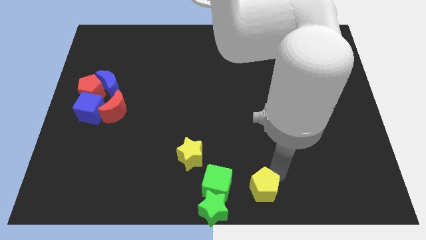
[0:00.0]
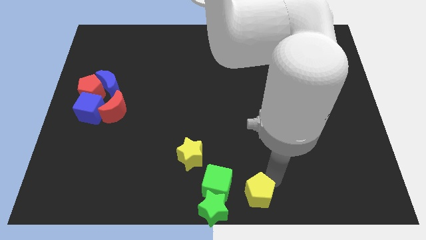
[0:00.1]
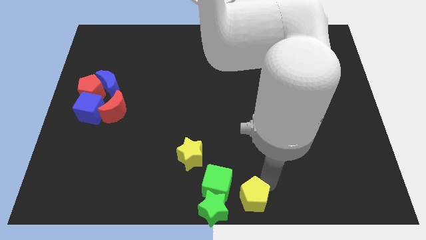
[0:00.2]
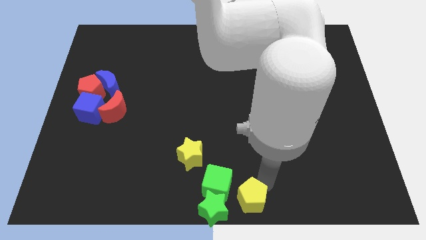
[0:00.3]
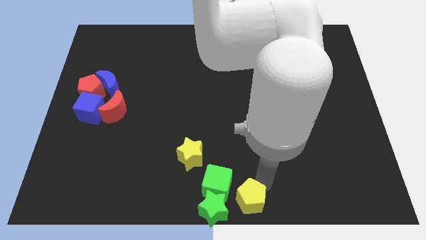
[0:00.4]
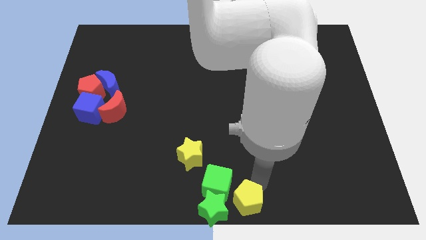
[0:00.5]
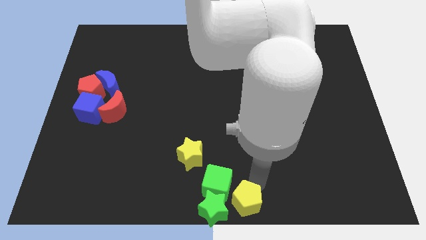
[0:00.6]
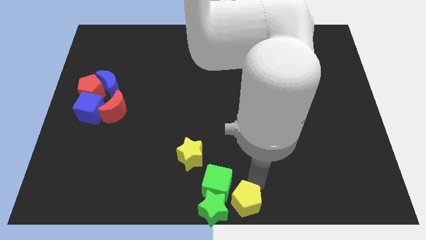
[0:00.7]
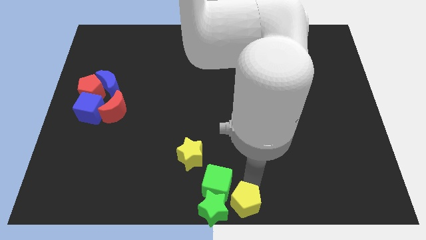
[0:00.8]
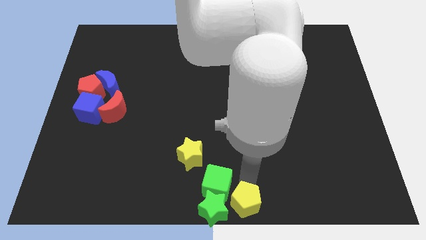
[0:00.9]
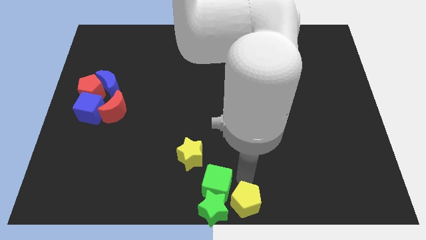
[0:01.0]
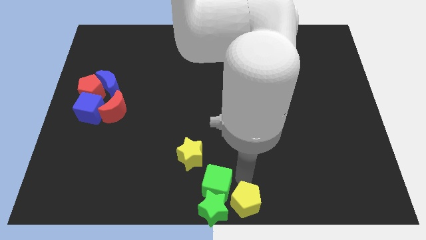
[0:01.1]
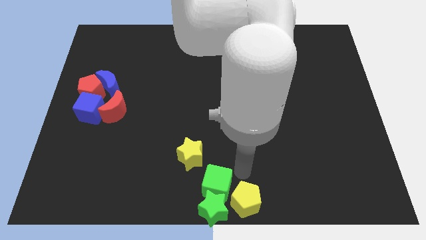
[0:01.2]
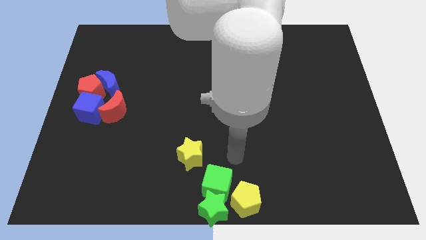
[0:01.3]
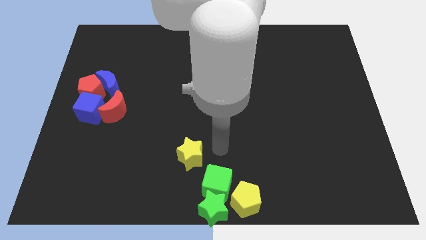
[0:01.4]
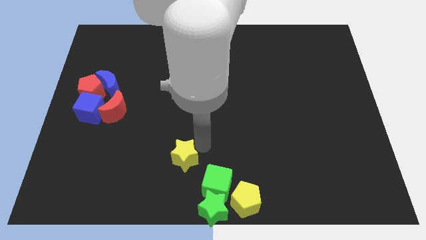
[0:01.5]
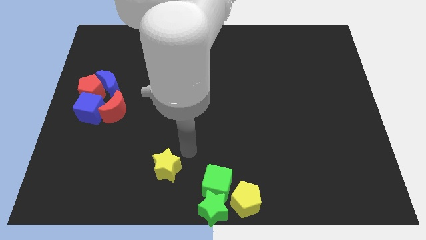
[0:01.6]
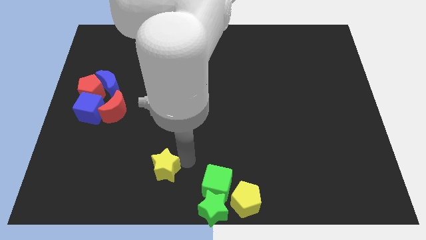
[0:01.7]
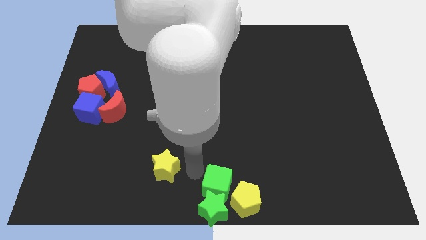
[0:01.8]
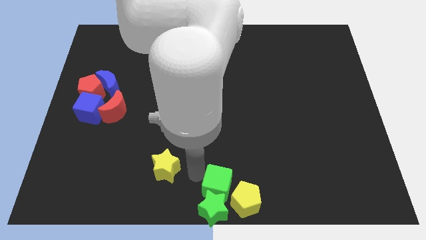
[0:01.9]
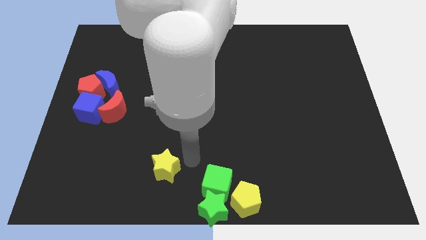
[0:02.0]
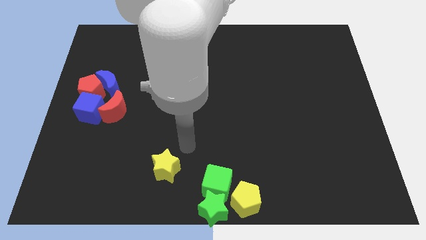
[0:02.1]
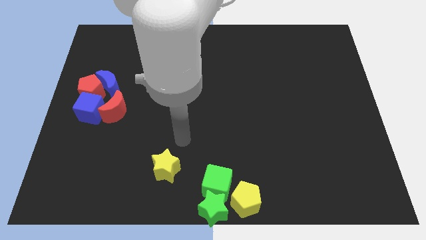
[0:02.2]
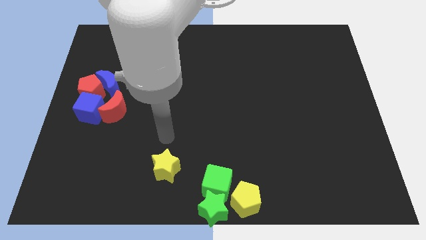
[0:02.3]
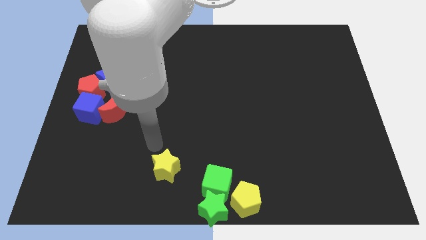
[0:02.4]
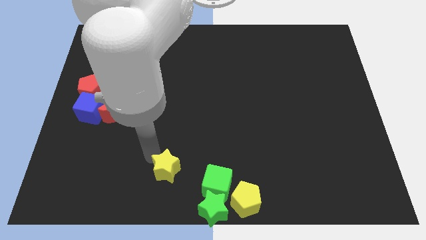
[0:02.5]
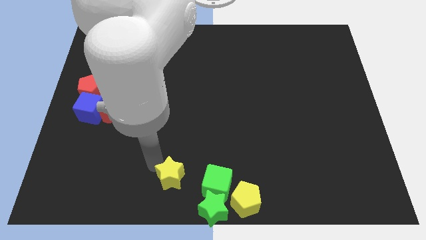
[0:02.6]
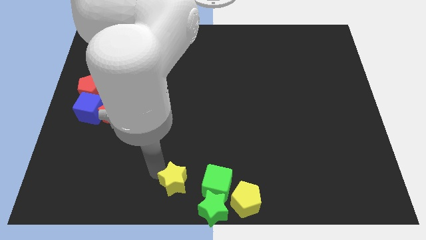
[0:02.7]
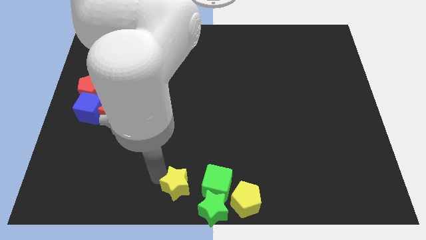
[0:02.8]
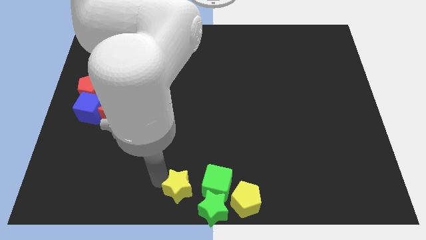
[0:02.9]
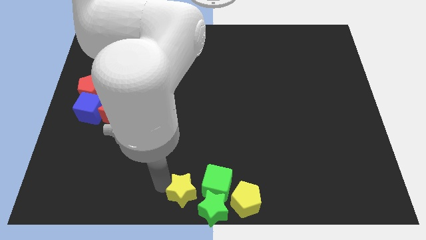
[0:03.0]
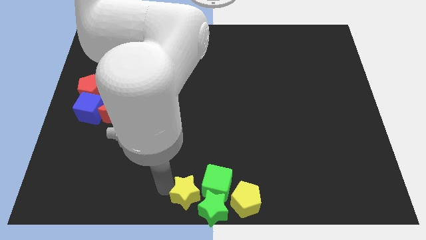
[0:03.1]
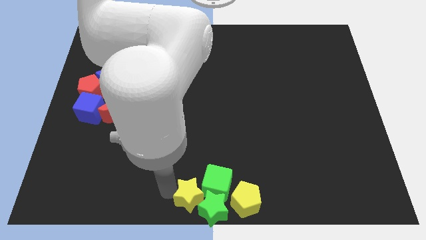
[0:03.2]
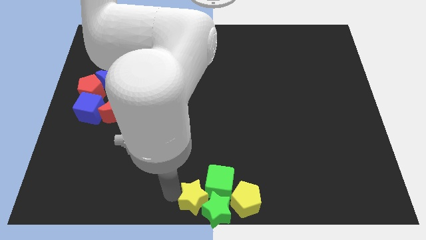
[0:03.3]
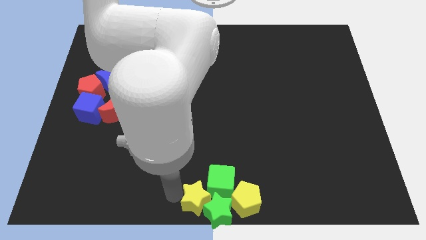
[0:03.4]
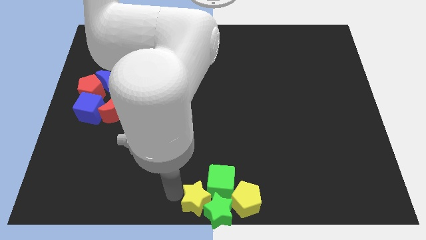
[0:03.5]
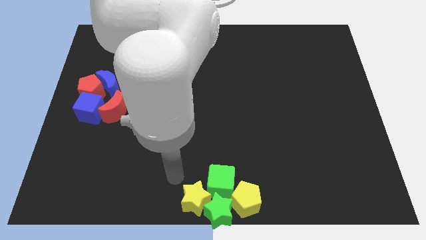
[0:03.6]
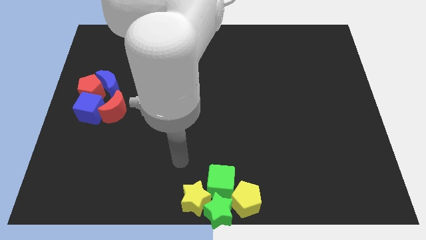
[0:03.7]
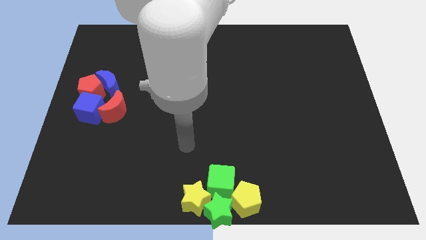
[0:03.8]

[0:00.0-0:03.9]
move yellow blocks to the bottom center of the board

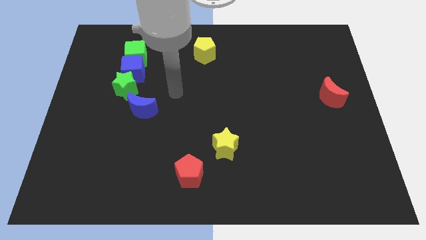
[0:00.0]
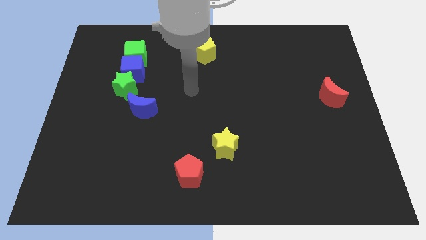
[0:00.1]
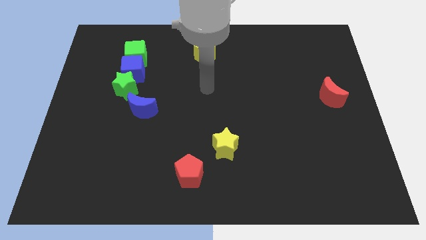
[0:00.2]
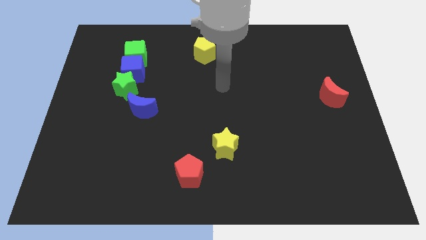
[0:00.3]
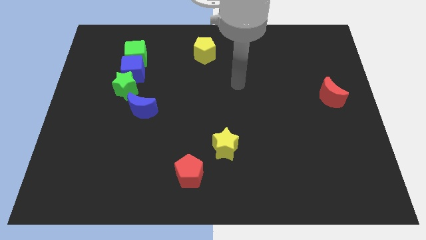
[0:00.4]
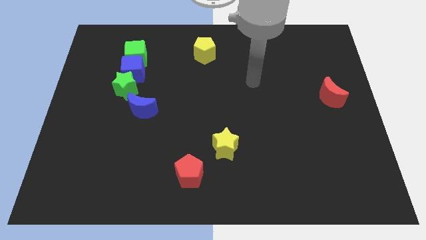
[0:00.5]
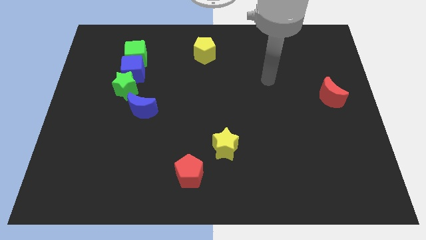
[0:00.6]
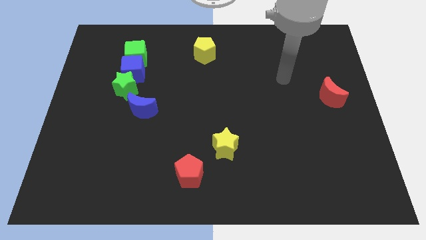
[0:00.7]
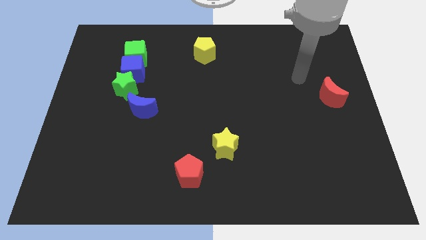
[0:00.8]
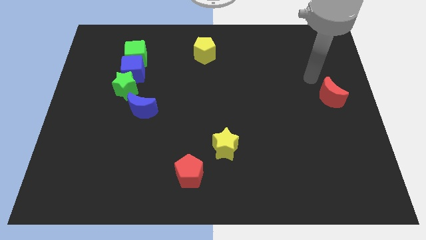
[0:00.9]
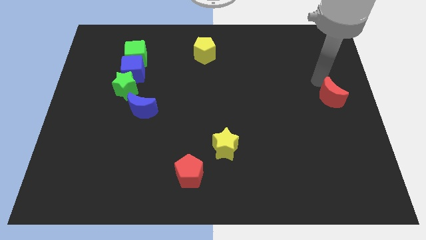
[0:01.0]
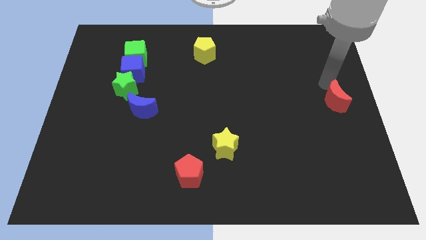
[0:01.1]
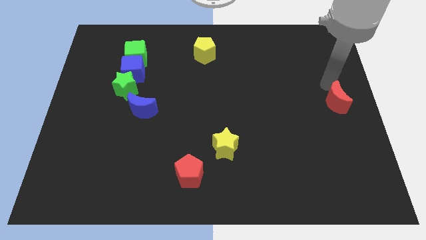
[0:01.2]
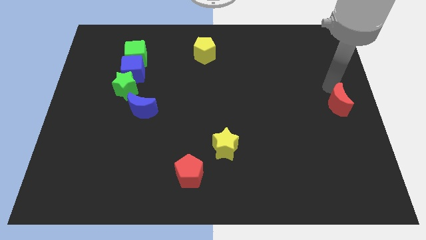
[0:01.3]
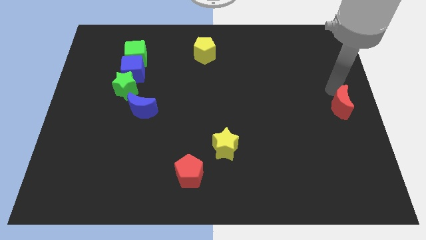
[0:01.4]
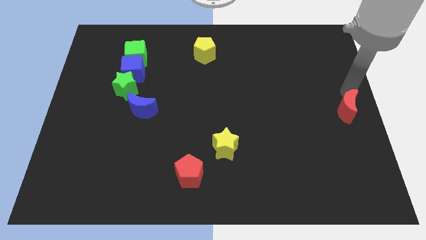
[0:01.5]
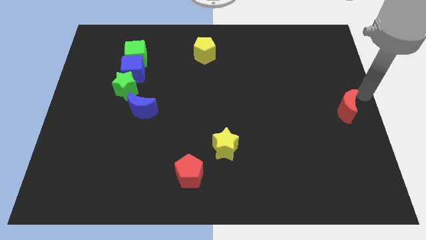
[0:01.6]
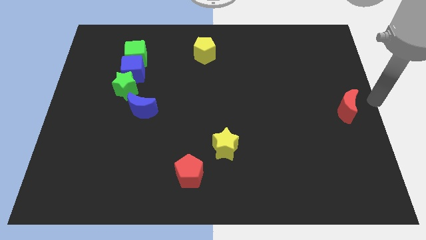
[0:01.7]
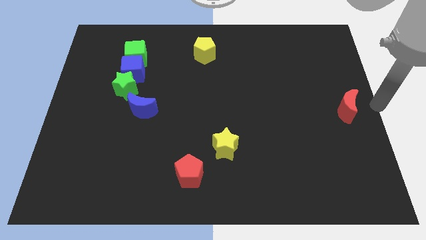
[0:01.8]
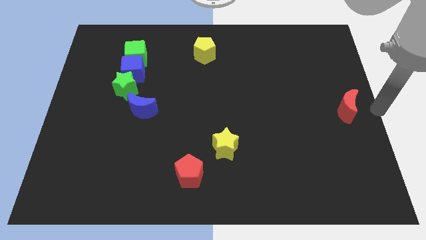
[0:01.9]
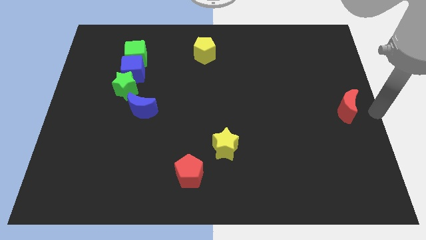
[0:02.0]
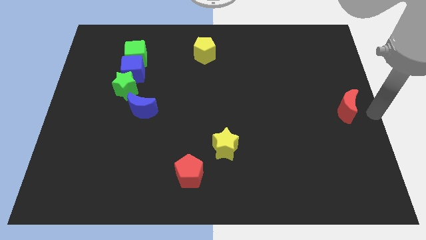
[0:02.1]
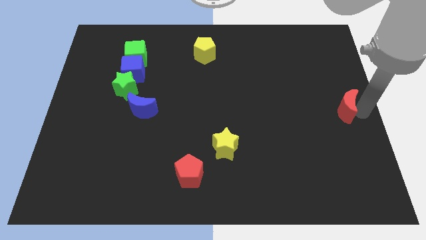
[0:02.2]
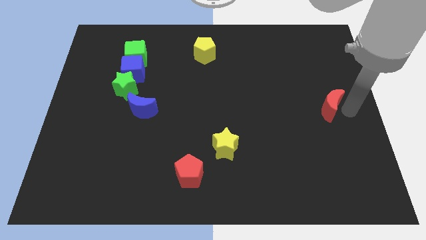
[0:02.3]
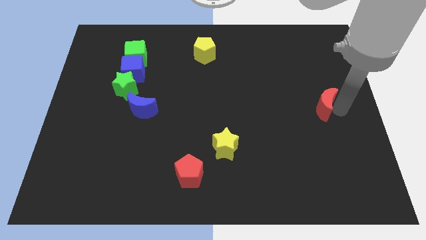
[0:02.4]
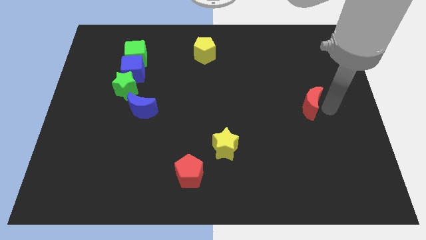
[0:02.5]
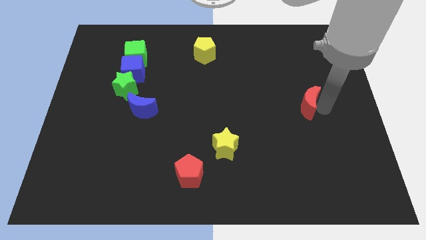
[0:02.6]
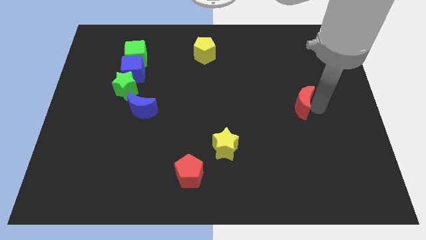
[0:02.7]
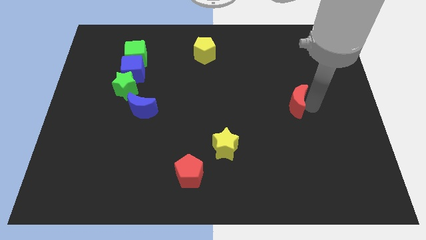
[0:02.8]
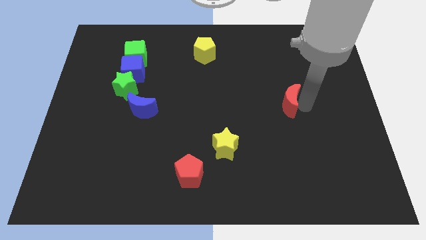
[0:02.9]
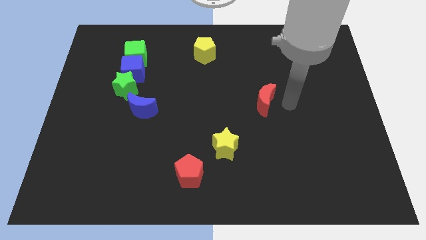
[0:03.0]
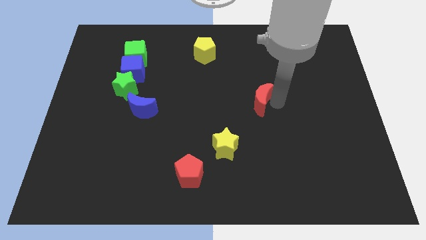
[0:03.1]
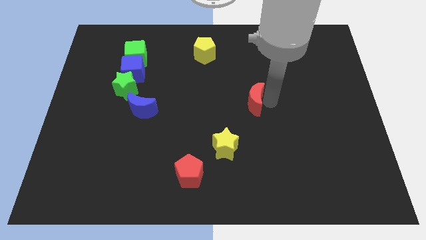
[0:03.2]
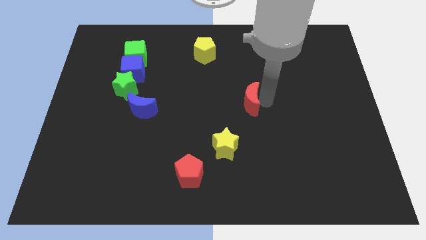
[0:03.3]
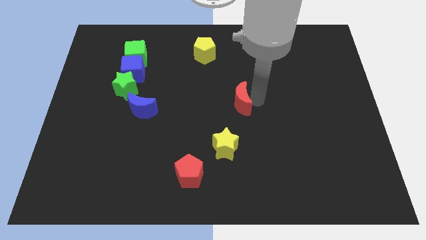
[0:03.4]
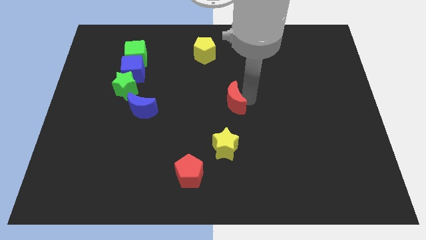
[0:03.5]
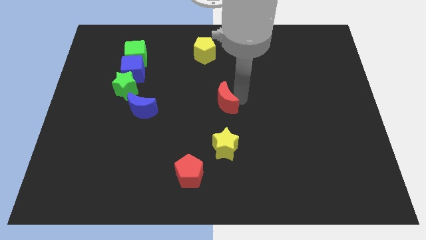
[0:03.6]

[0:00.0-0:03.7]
place the red crescent at the center of the board

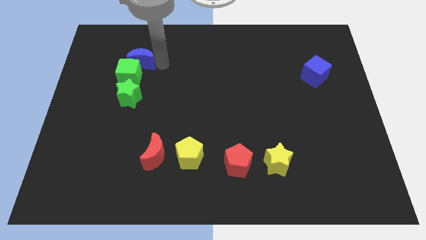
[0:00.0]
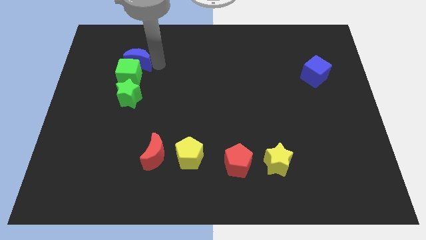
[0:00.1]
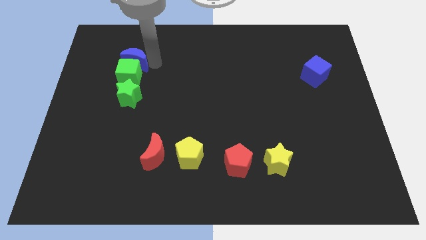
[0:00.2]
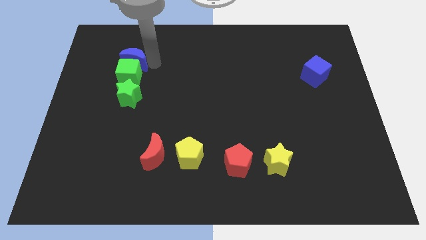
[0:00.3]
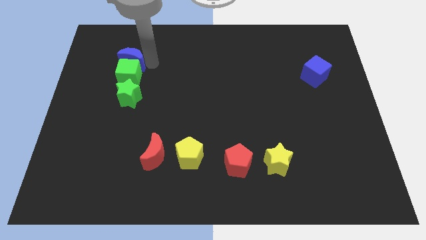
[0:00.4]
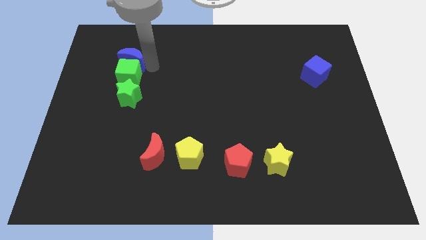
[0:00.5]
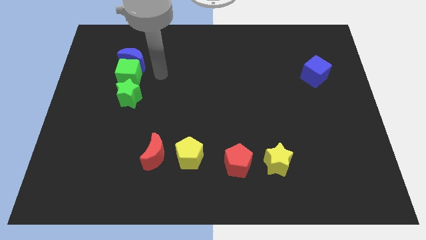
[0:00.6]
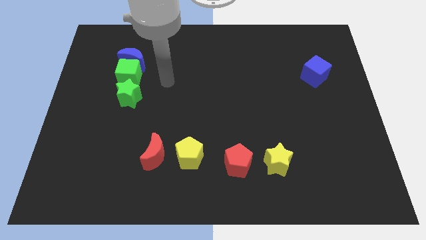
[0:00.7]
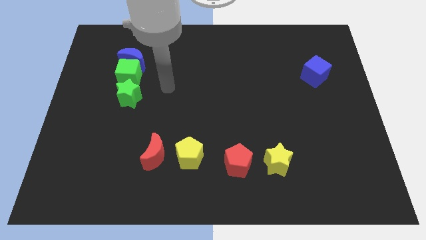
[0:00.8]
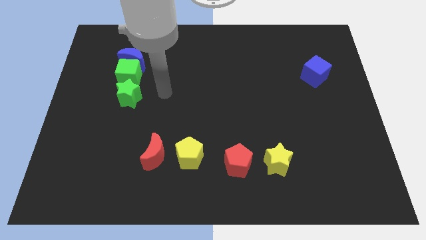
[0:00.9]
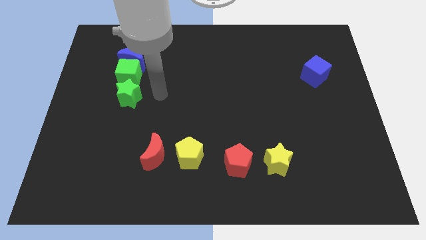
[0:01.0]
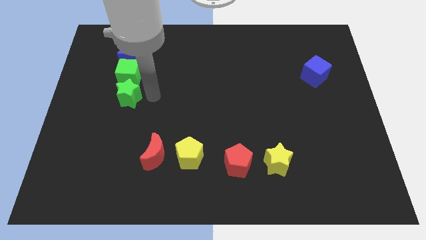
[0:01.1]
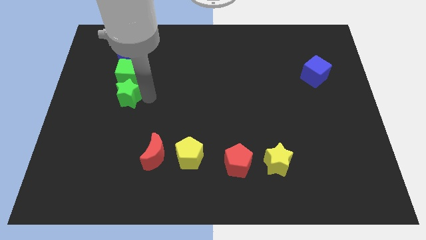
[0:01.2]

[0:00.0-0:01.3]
drag the blue moon slightly to the left

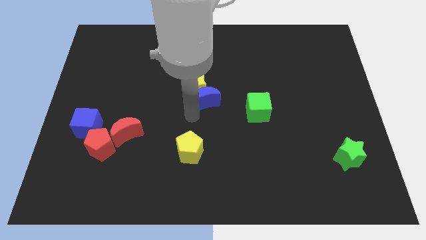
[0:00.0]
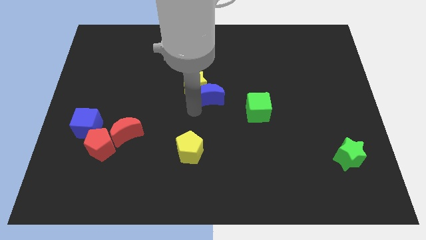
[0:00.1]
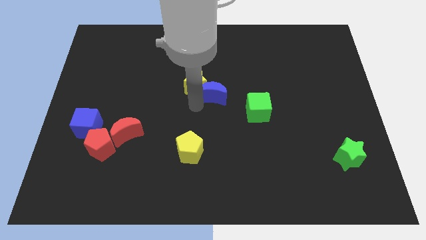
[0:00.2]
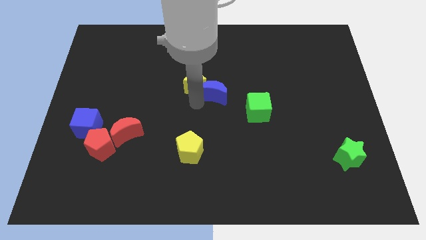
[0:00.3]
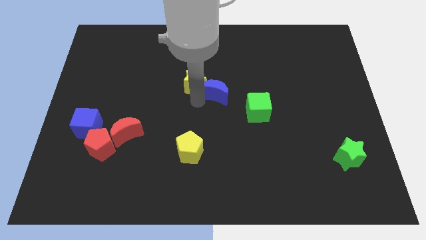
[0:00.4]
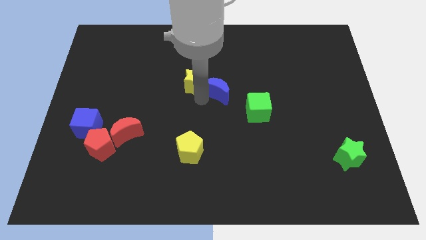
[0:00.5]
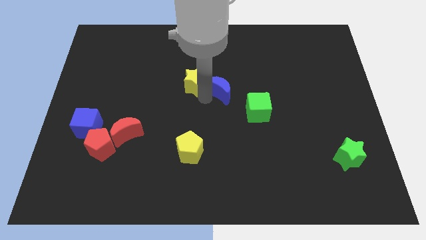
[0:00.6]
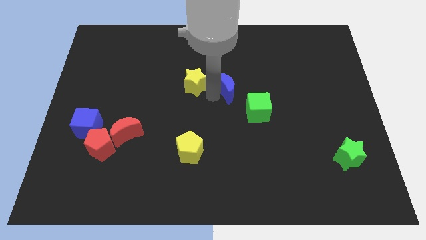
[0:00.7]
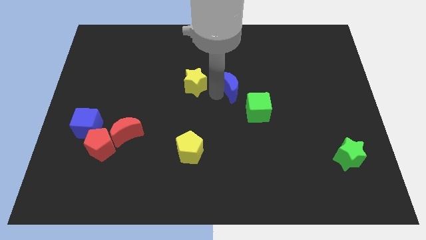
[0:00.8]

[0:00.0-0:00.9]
push the blue moon into the yellow star
